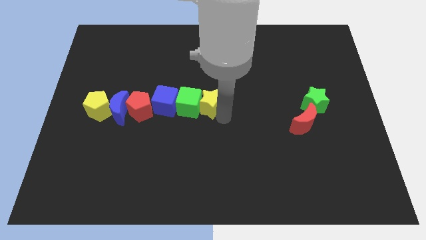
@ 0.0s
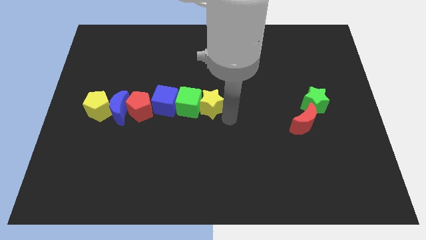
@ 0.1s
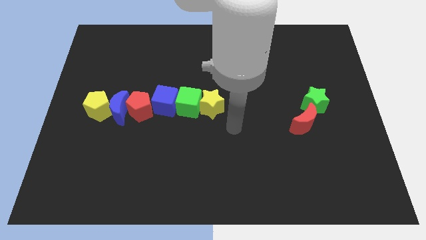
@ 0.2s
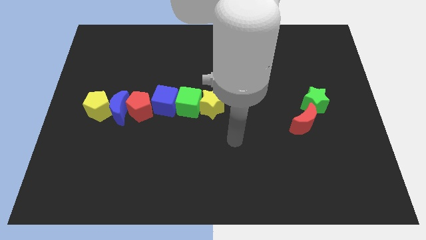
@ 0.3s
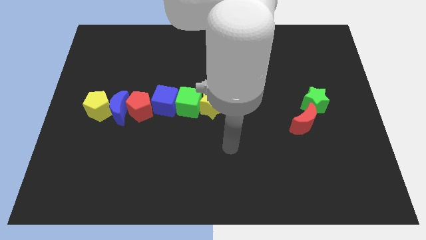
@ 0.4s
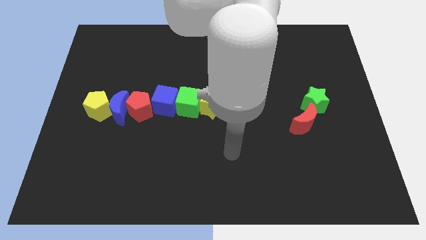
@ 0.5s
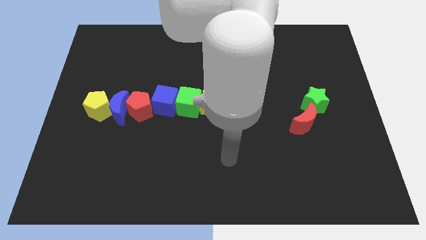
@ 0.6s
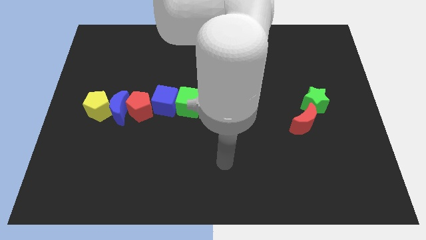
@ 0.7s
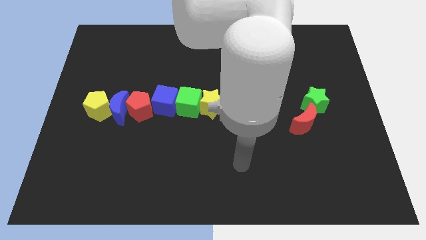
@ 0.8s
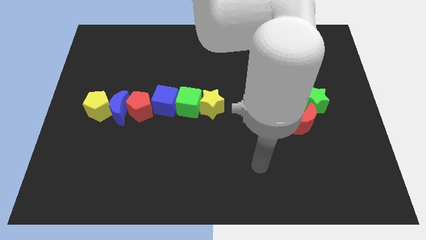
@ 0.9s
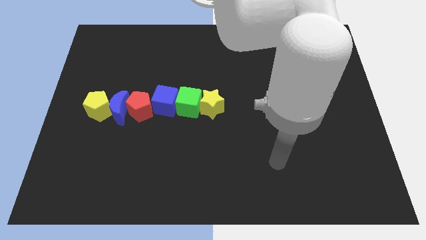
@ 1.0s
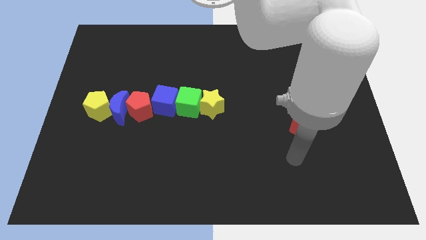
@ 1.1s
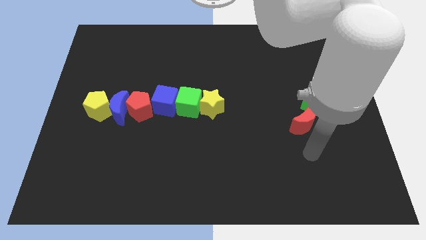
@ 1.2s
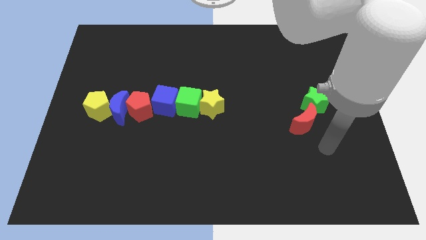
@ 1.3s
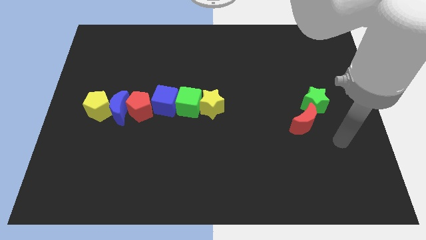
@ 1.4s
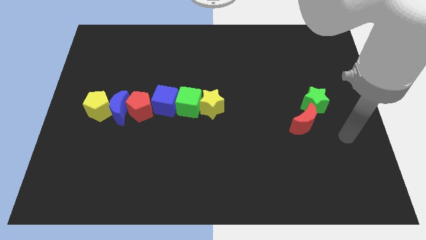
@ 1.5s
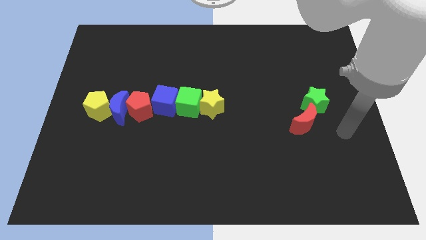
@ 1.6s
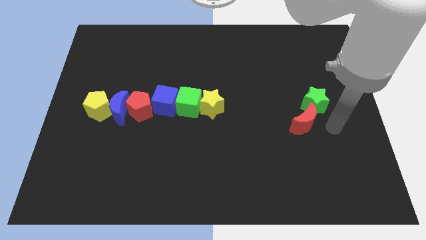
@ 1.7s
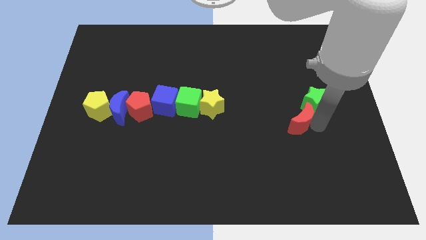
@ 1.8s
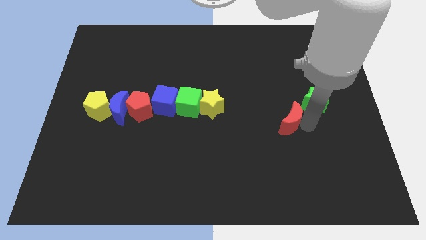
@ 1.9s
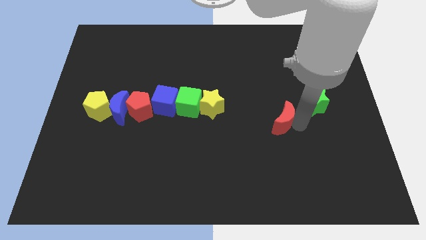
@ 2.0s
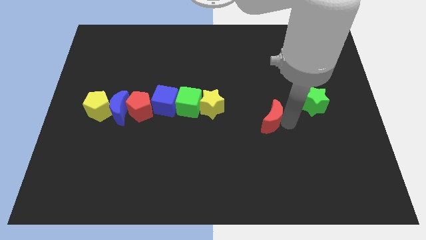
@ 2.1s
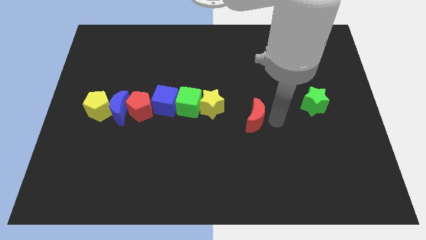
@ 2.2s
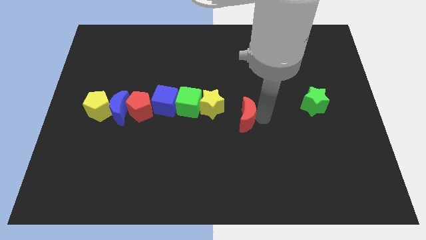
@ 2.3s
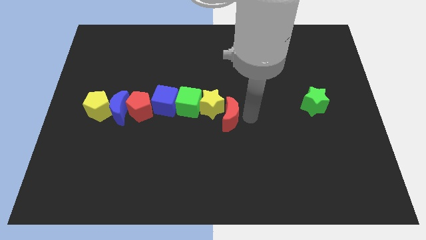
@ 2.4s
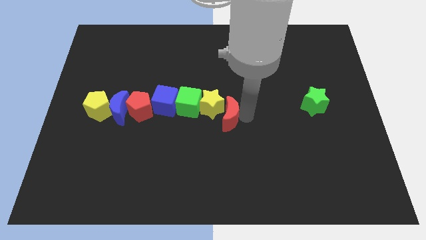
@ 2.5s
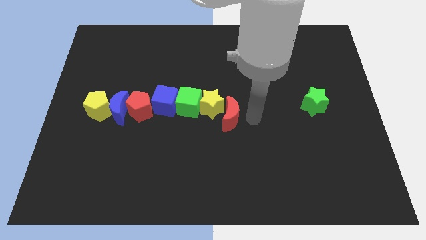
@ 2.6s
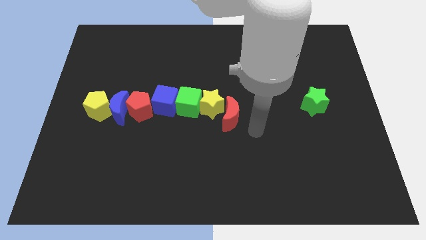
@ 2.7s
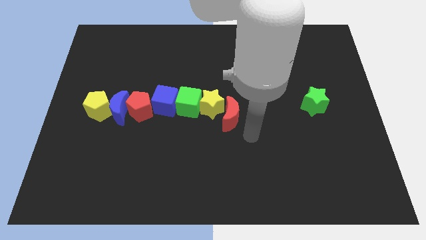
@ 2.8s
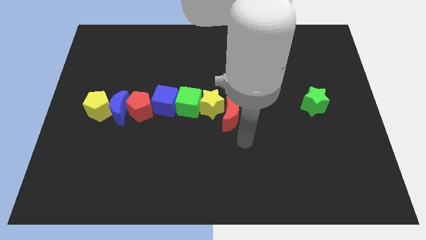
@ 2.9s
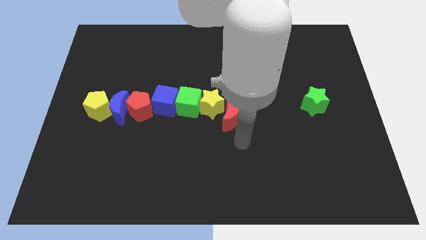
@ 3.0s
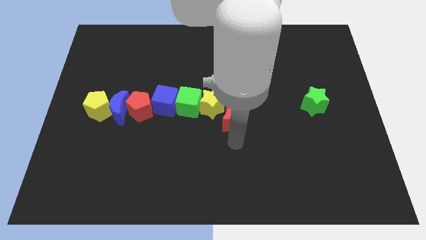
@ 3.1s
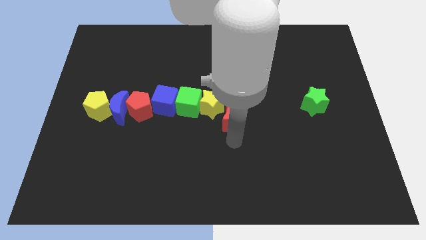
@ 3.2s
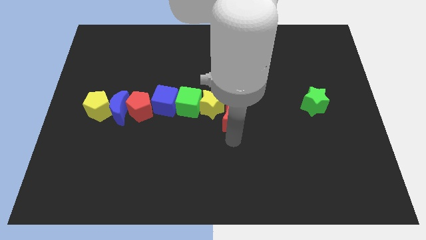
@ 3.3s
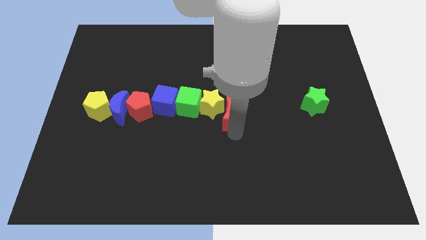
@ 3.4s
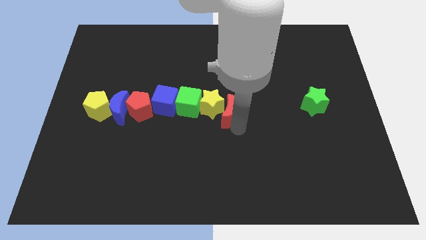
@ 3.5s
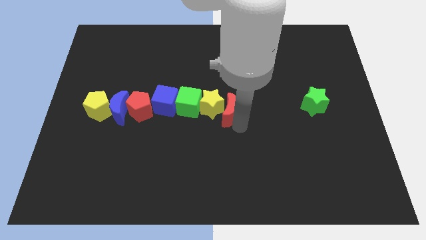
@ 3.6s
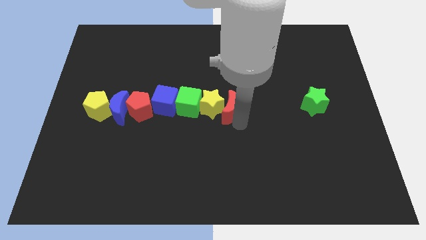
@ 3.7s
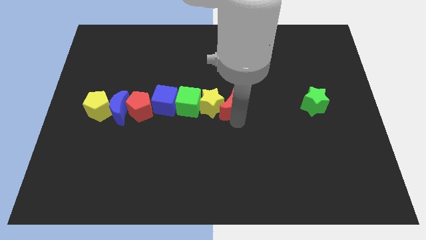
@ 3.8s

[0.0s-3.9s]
push red crescent into the yellow star

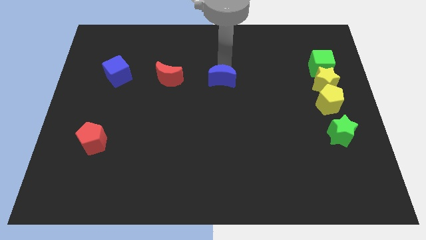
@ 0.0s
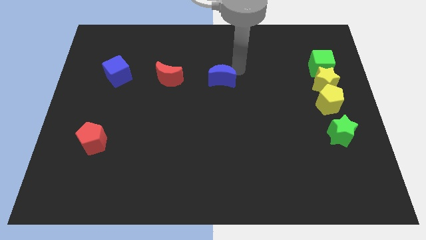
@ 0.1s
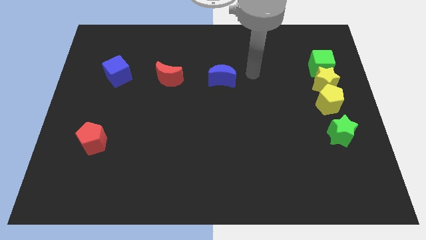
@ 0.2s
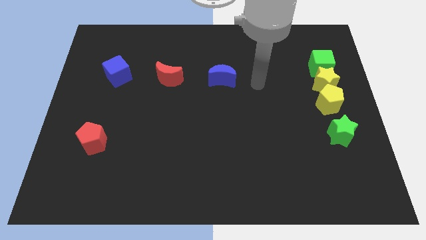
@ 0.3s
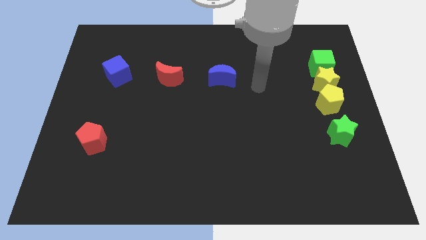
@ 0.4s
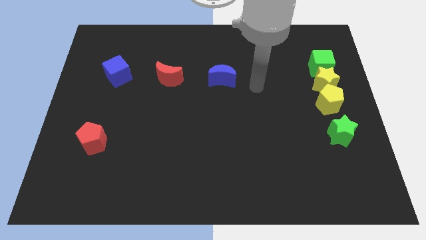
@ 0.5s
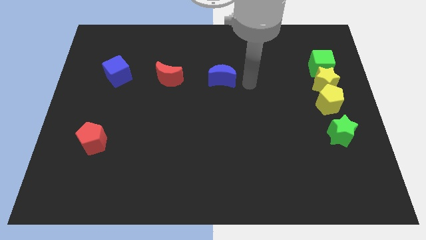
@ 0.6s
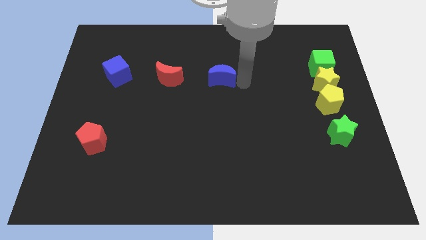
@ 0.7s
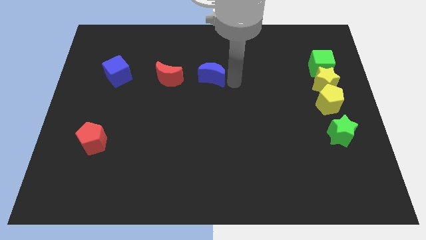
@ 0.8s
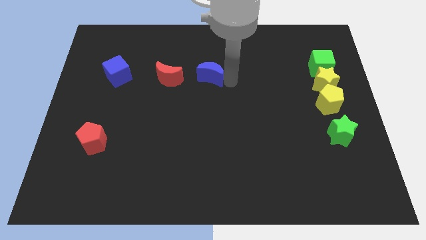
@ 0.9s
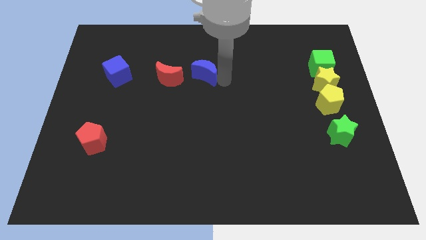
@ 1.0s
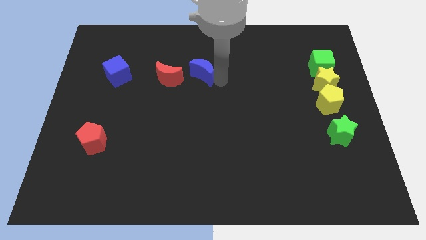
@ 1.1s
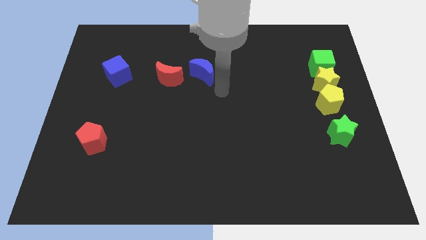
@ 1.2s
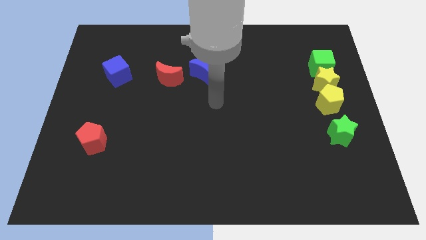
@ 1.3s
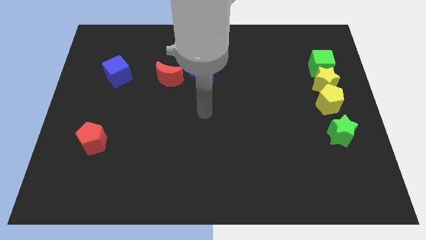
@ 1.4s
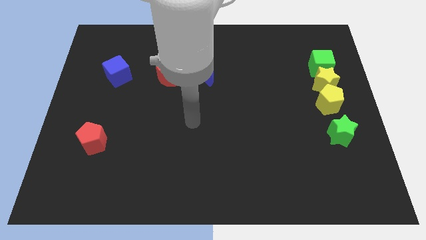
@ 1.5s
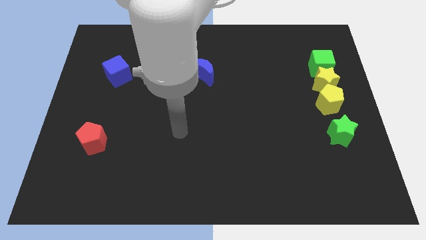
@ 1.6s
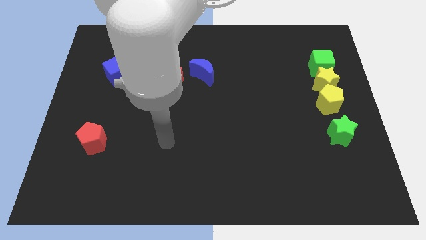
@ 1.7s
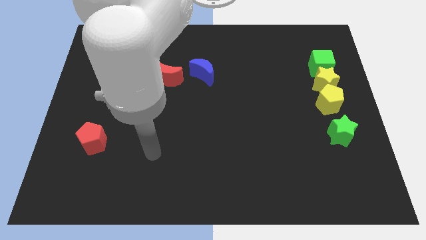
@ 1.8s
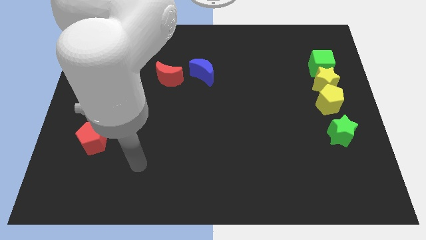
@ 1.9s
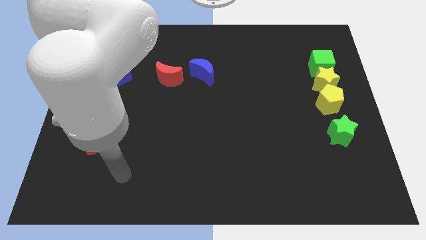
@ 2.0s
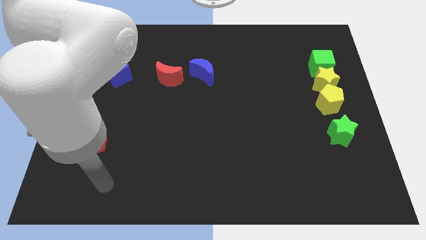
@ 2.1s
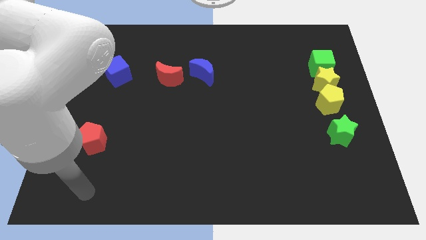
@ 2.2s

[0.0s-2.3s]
push blue crescent towards red crescent

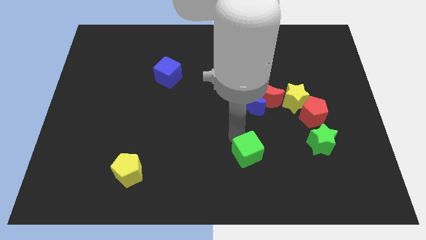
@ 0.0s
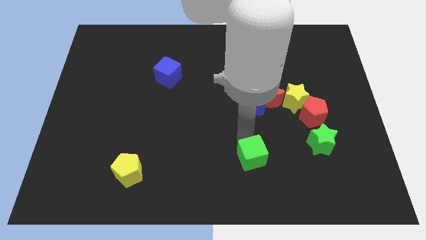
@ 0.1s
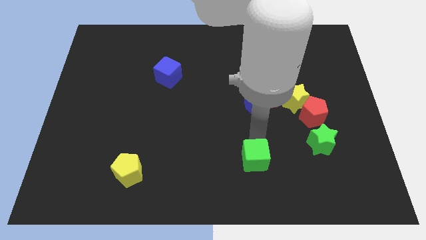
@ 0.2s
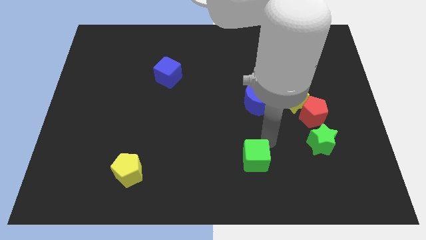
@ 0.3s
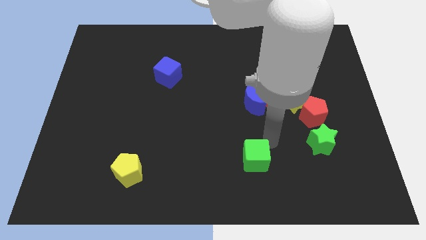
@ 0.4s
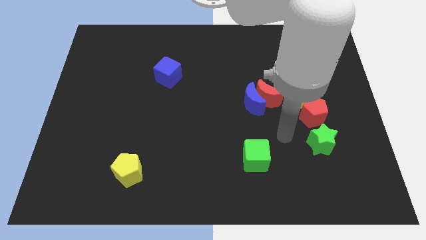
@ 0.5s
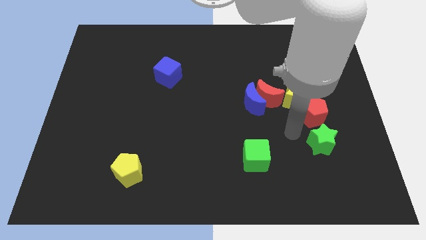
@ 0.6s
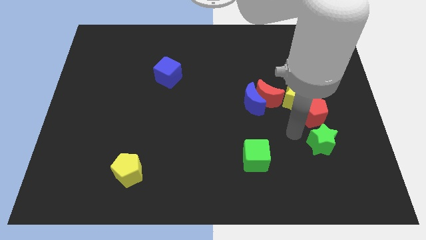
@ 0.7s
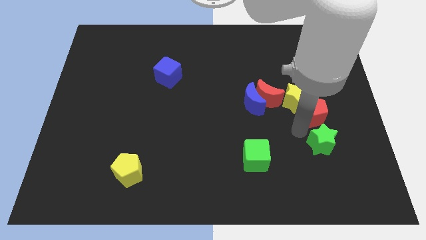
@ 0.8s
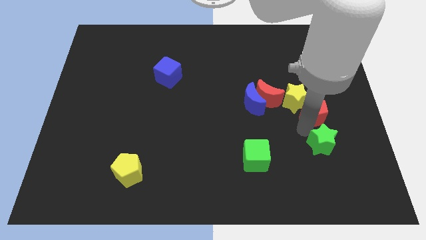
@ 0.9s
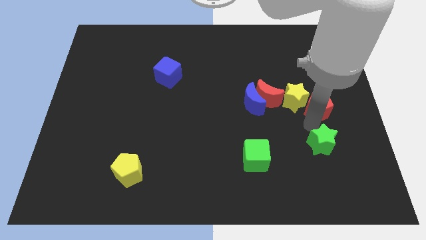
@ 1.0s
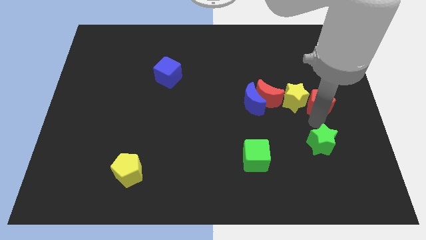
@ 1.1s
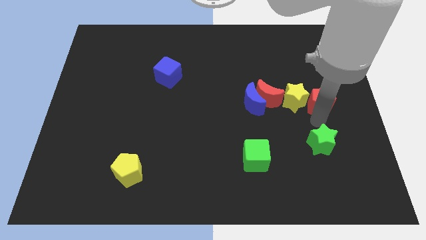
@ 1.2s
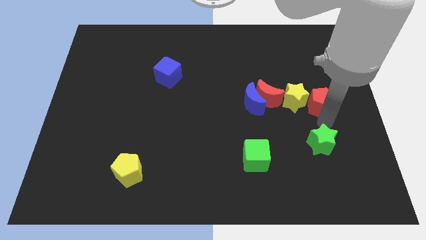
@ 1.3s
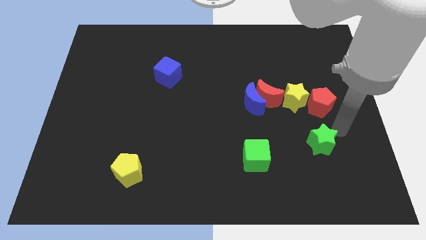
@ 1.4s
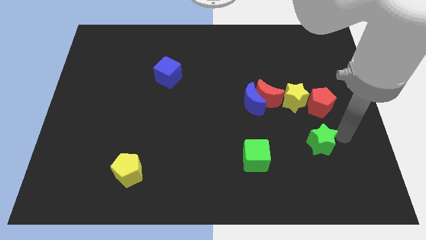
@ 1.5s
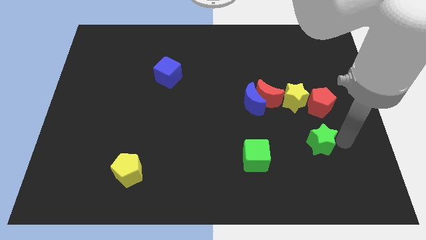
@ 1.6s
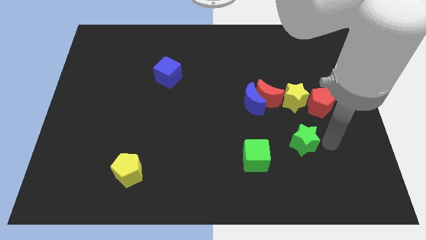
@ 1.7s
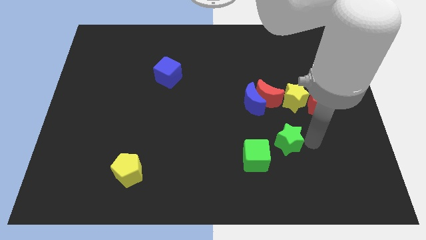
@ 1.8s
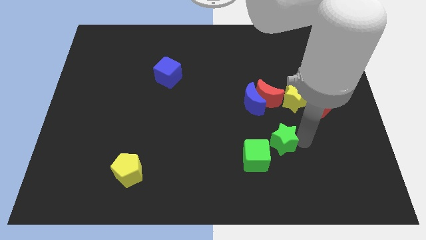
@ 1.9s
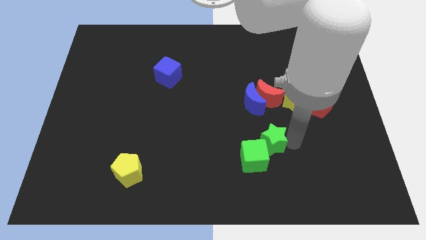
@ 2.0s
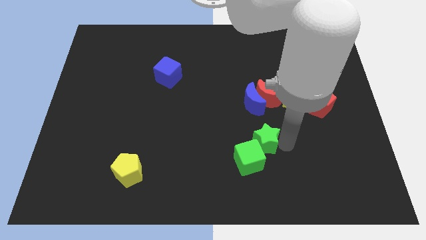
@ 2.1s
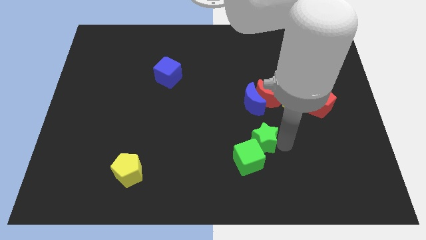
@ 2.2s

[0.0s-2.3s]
move the green star to the top right to the green cube

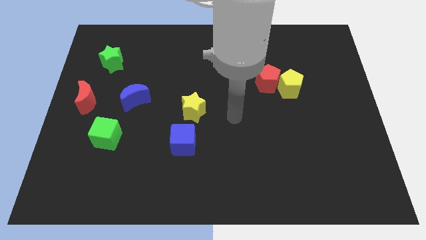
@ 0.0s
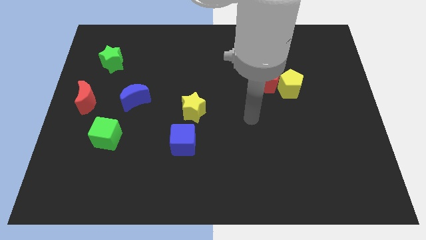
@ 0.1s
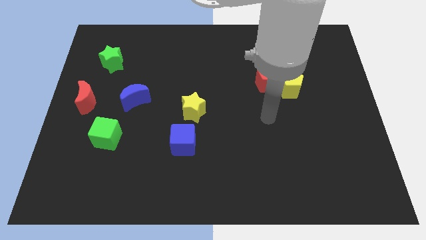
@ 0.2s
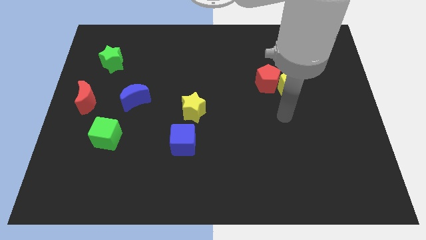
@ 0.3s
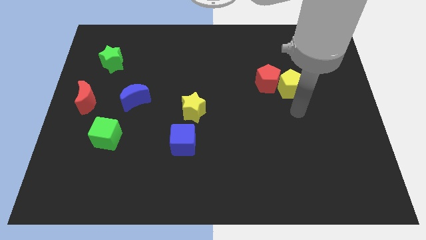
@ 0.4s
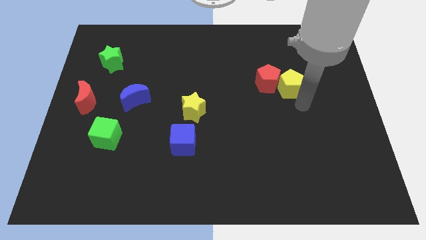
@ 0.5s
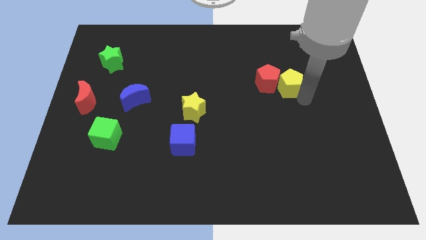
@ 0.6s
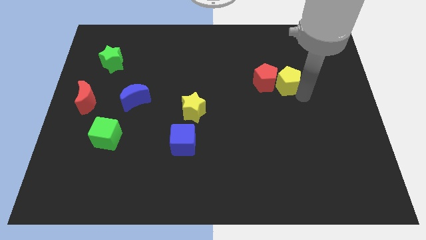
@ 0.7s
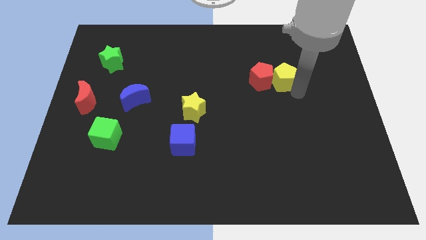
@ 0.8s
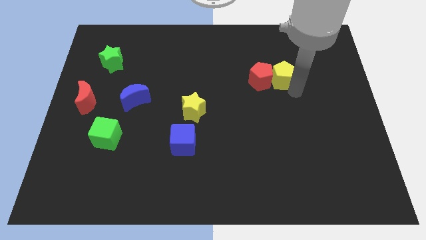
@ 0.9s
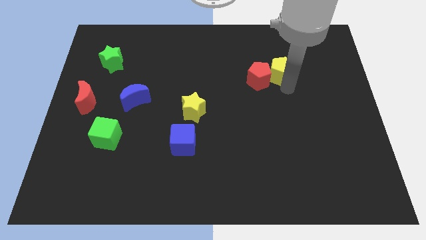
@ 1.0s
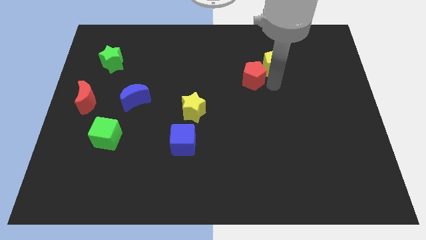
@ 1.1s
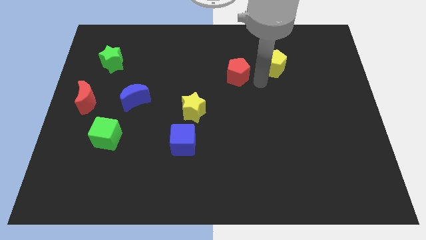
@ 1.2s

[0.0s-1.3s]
separate the yellow pentagon and red pentagon
